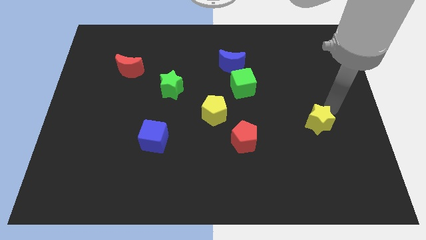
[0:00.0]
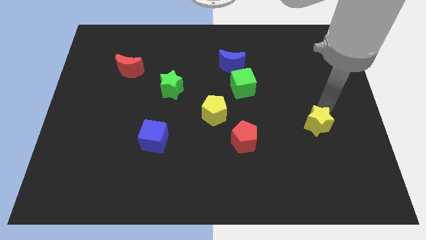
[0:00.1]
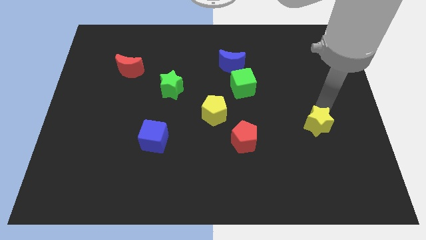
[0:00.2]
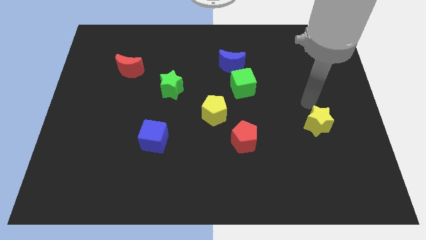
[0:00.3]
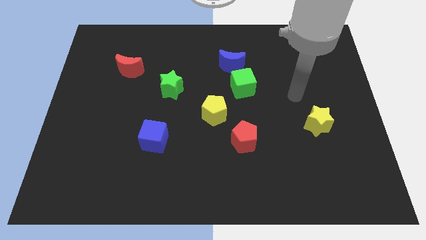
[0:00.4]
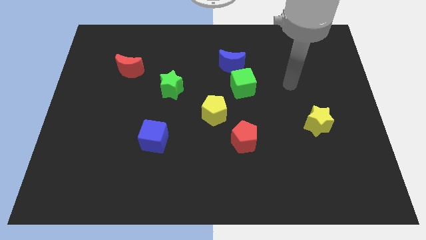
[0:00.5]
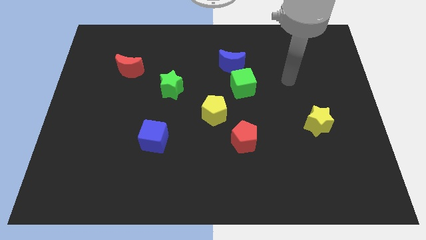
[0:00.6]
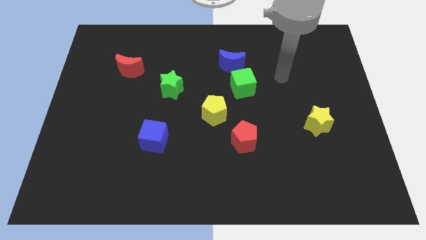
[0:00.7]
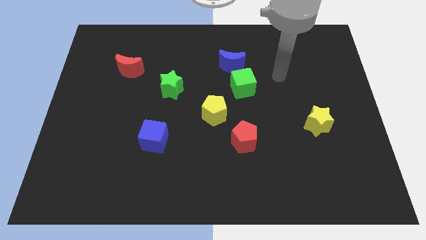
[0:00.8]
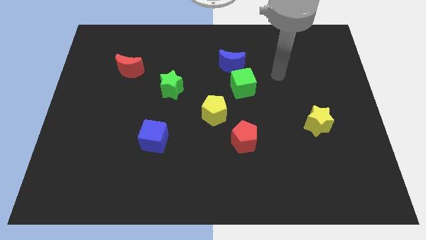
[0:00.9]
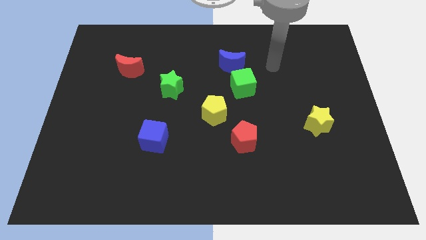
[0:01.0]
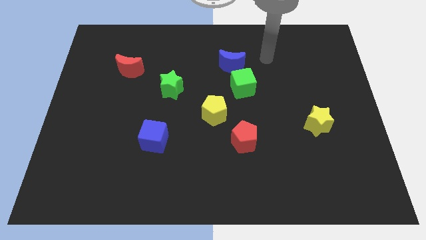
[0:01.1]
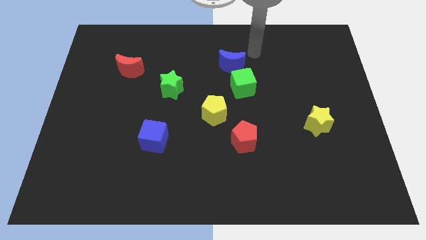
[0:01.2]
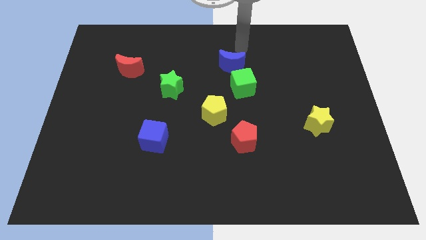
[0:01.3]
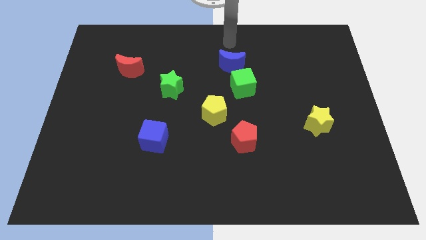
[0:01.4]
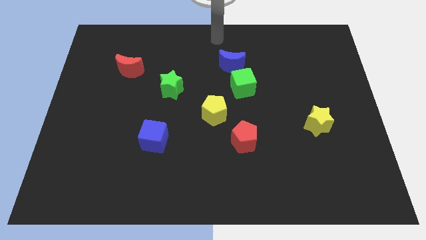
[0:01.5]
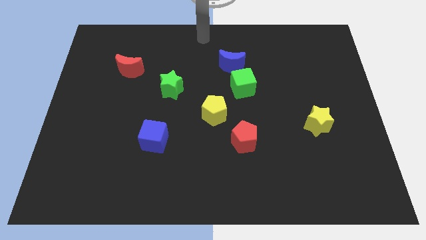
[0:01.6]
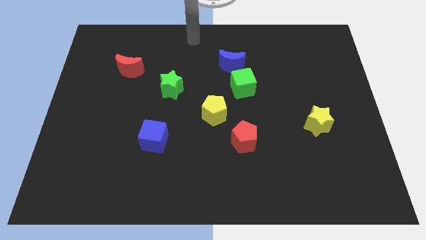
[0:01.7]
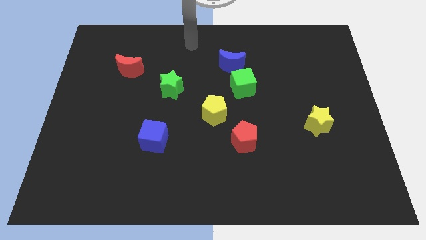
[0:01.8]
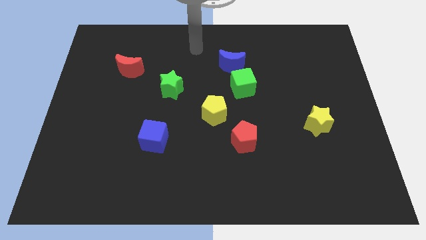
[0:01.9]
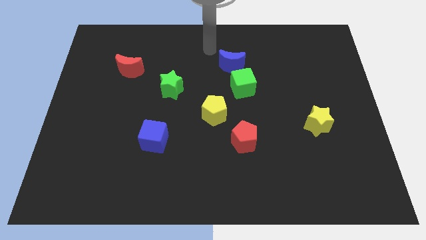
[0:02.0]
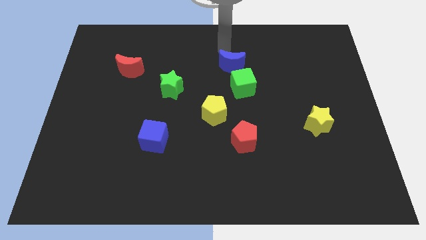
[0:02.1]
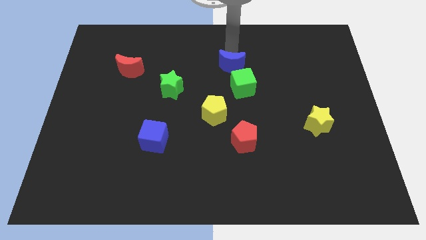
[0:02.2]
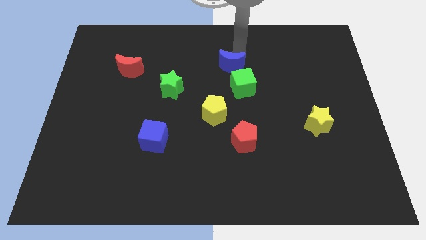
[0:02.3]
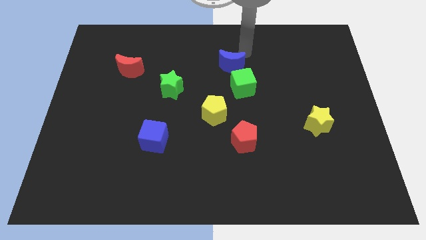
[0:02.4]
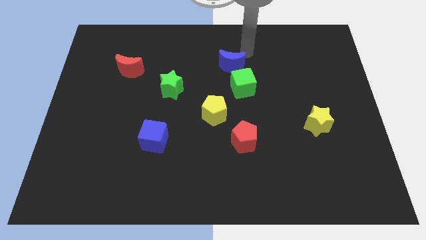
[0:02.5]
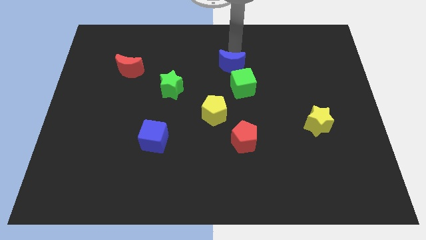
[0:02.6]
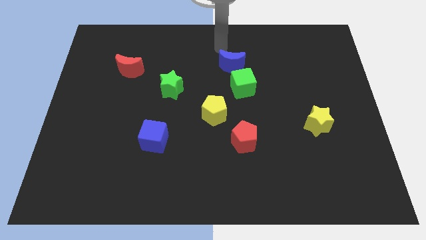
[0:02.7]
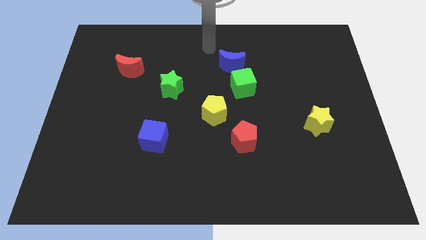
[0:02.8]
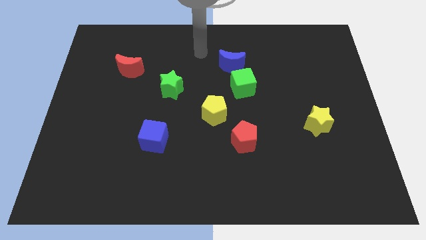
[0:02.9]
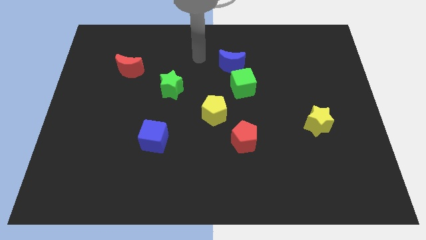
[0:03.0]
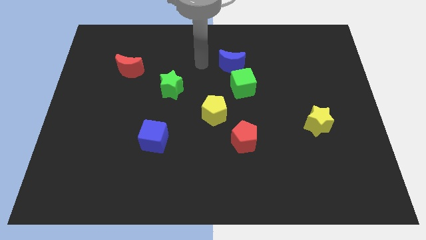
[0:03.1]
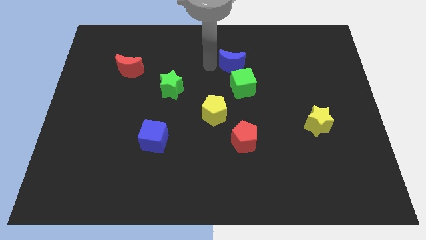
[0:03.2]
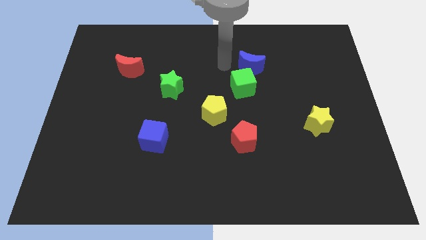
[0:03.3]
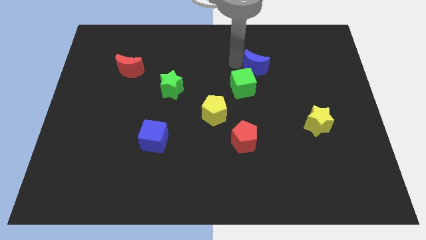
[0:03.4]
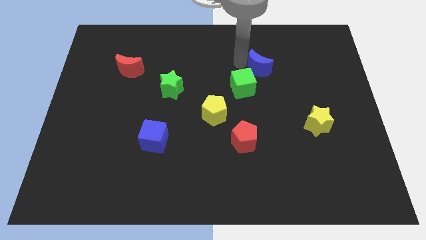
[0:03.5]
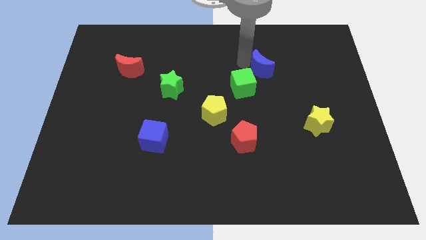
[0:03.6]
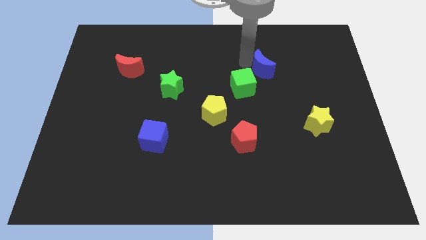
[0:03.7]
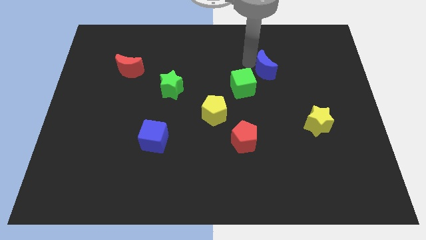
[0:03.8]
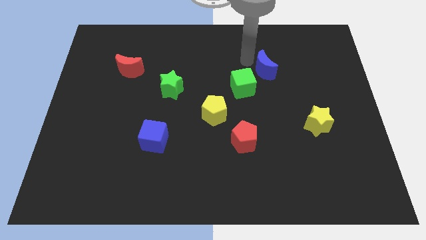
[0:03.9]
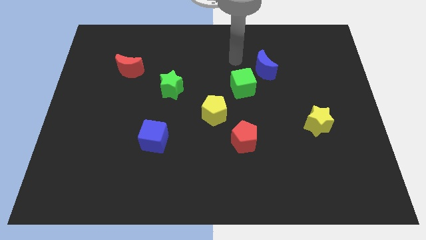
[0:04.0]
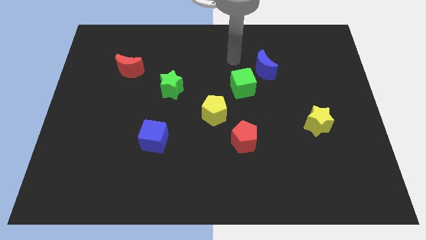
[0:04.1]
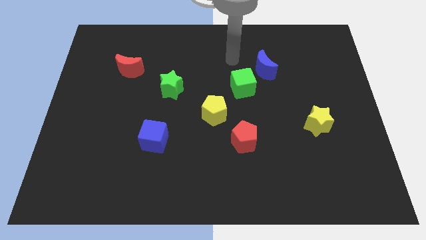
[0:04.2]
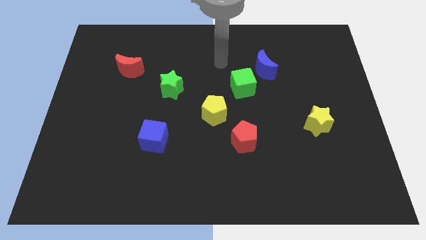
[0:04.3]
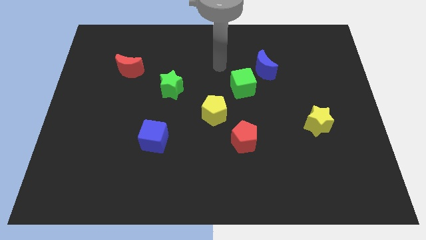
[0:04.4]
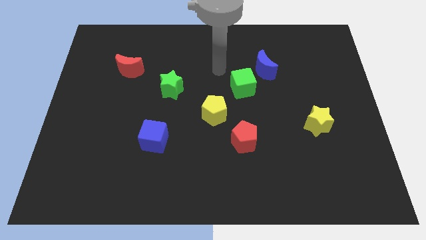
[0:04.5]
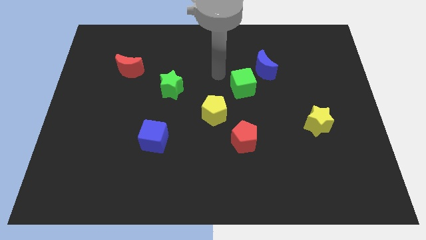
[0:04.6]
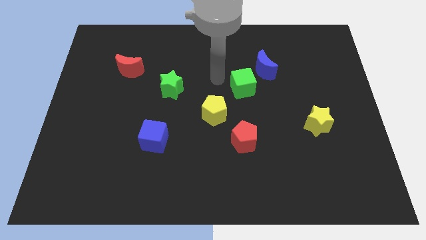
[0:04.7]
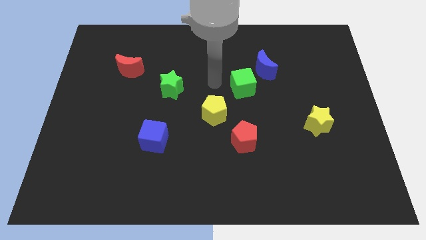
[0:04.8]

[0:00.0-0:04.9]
slightly move the blue moon towards the right

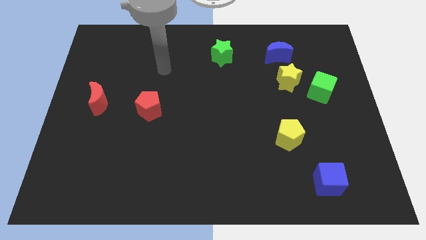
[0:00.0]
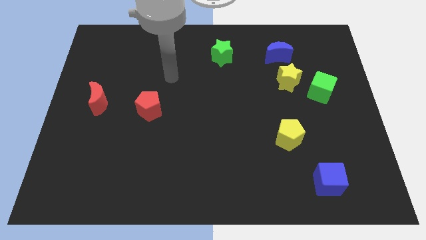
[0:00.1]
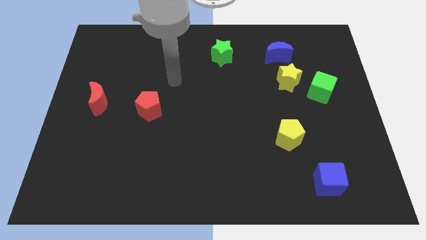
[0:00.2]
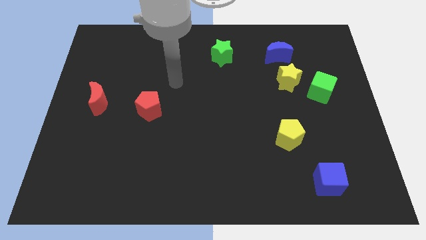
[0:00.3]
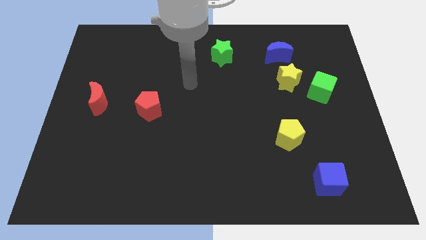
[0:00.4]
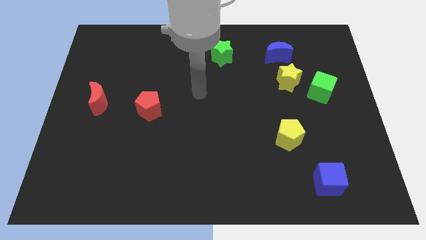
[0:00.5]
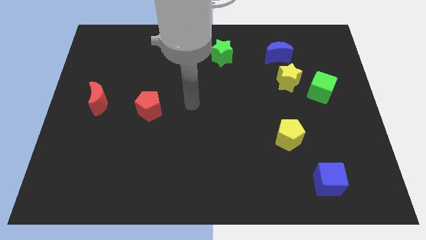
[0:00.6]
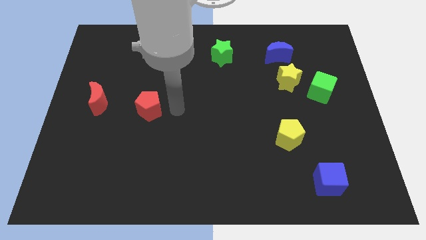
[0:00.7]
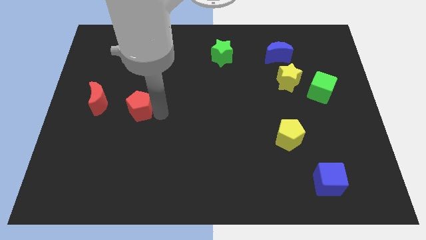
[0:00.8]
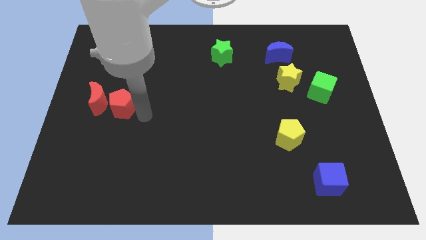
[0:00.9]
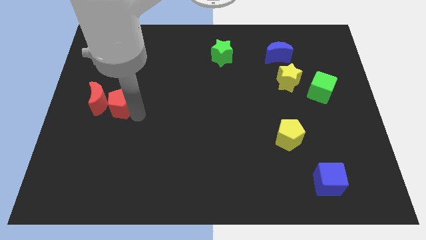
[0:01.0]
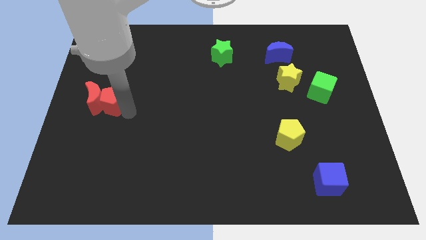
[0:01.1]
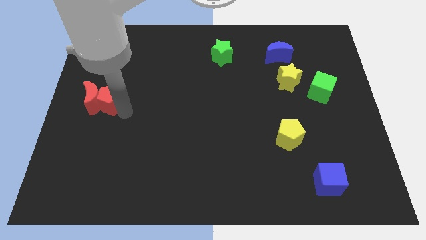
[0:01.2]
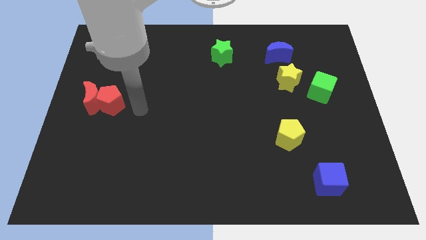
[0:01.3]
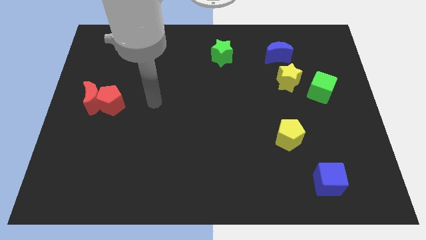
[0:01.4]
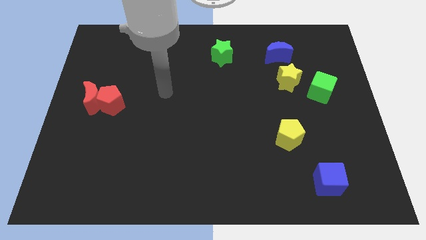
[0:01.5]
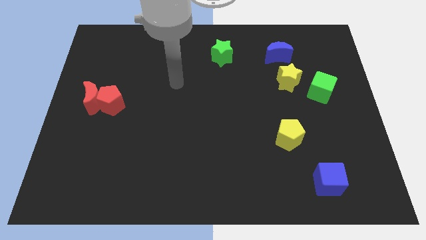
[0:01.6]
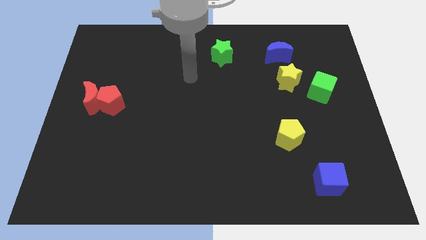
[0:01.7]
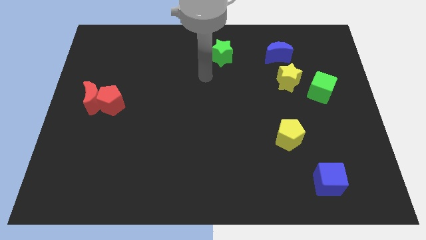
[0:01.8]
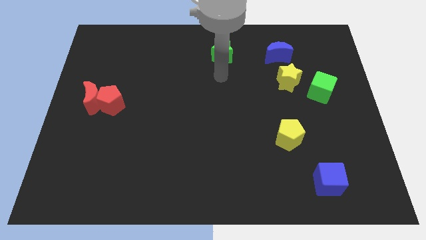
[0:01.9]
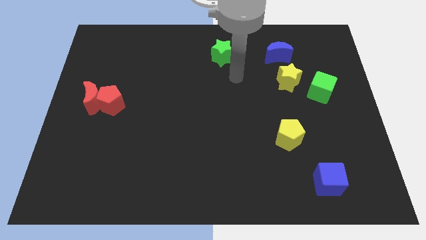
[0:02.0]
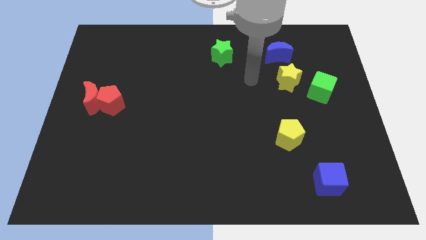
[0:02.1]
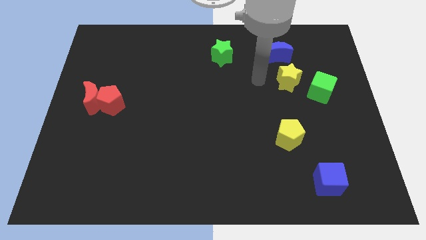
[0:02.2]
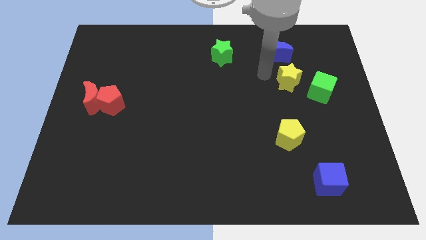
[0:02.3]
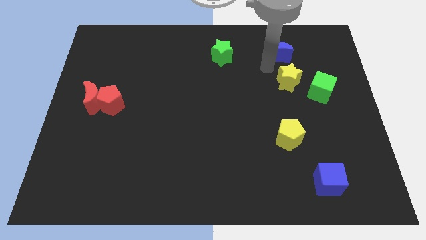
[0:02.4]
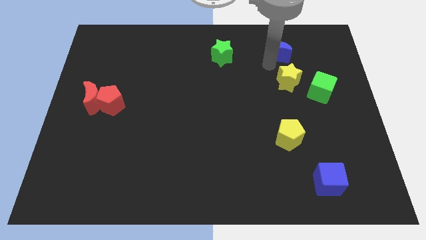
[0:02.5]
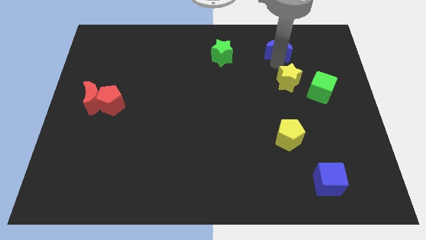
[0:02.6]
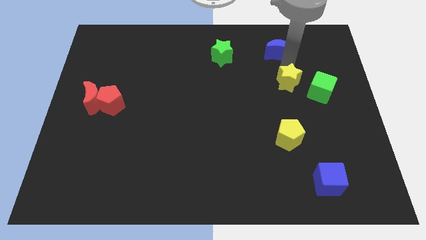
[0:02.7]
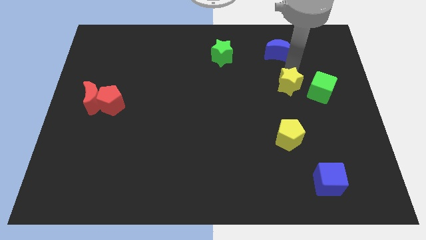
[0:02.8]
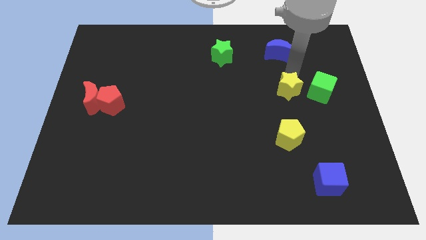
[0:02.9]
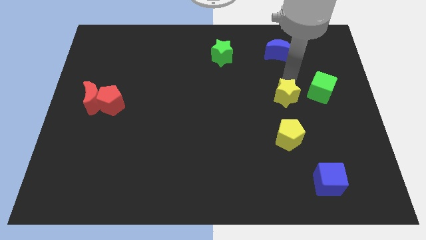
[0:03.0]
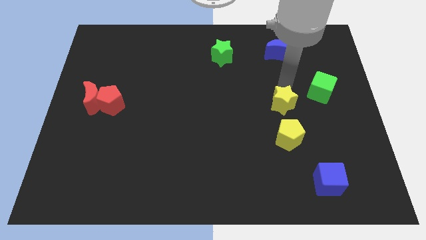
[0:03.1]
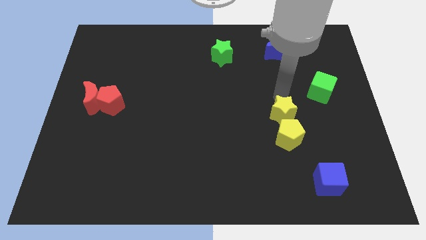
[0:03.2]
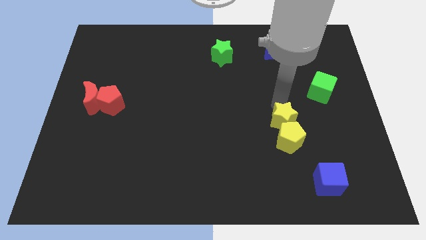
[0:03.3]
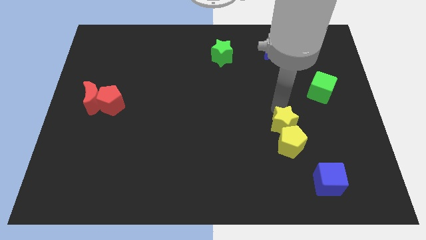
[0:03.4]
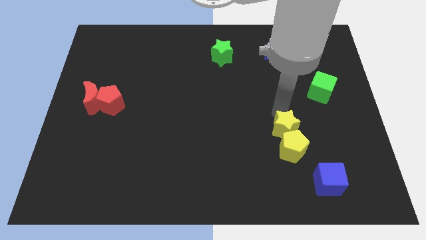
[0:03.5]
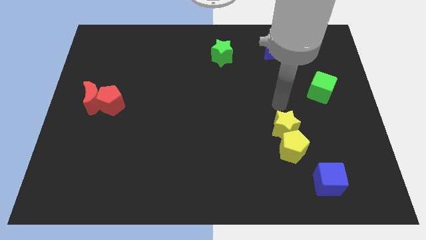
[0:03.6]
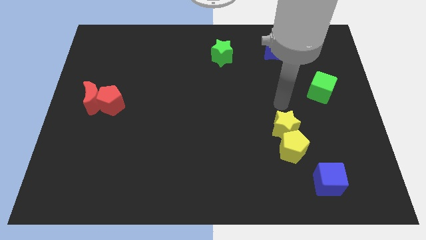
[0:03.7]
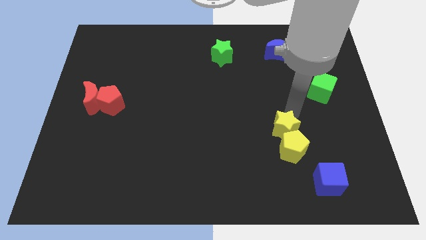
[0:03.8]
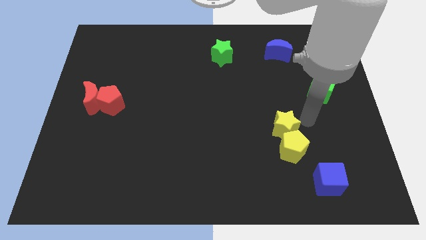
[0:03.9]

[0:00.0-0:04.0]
place red and yellow blocks separately at one place

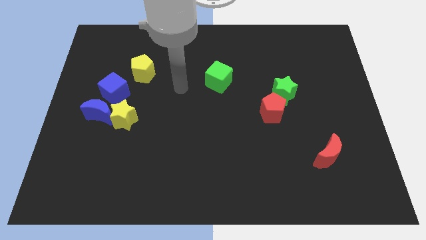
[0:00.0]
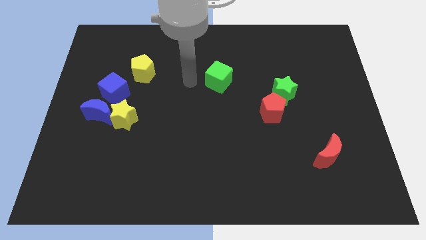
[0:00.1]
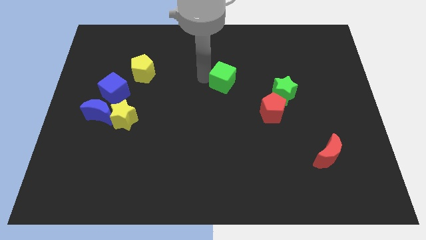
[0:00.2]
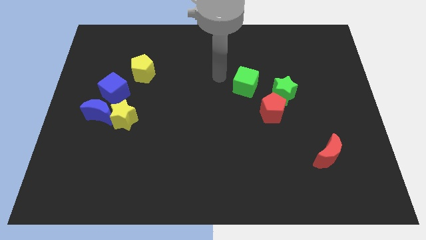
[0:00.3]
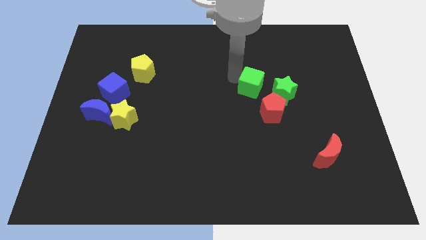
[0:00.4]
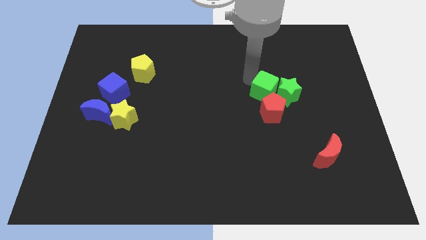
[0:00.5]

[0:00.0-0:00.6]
move green cube into green star and red pentagon
